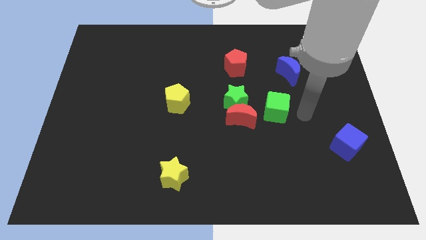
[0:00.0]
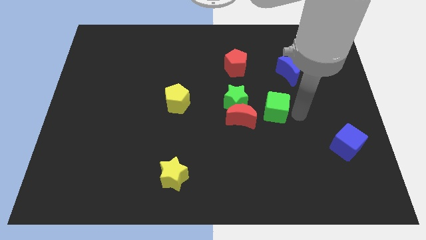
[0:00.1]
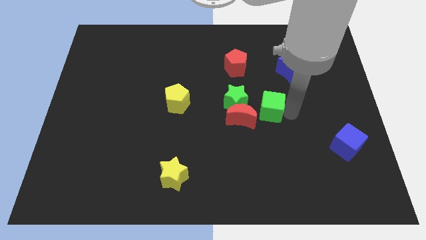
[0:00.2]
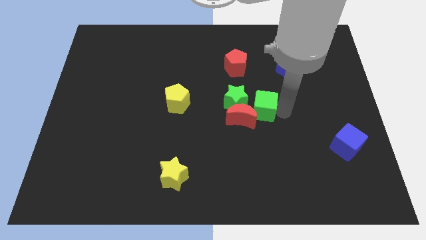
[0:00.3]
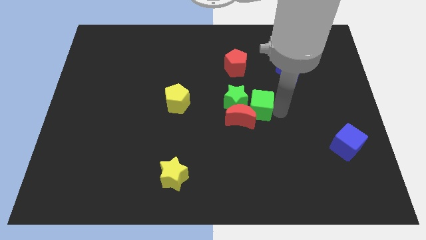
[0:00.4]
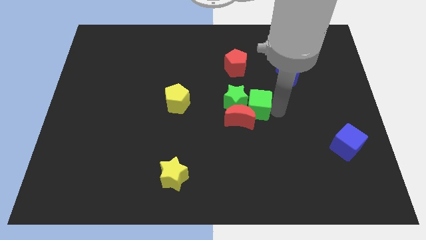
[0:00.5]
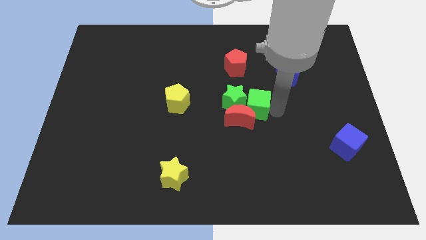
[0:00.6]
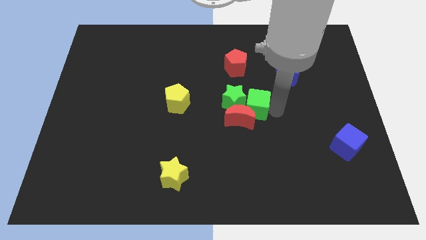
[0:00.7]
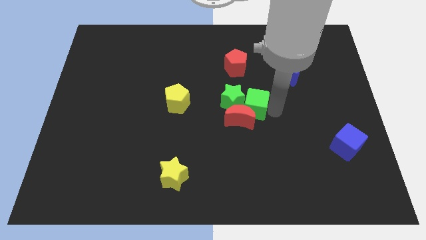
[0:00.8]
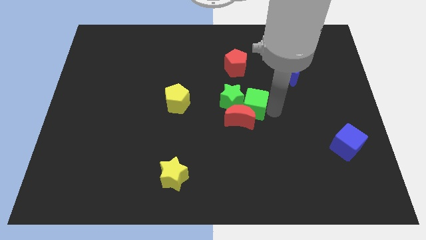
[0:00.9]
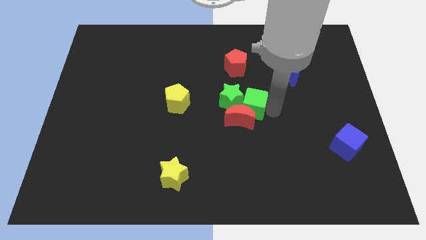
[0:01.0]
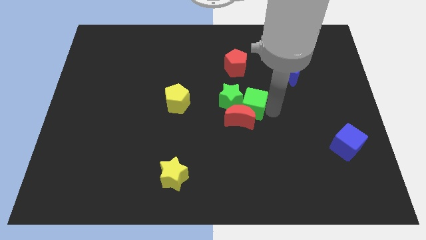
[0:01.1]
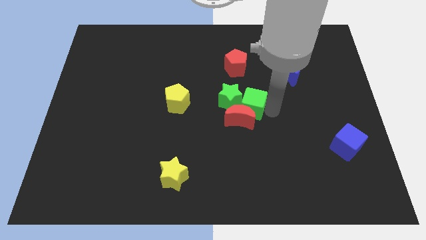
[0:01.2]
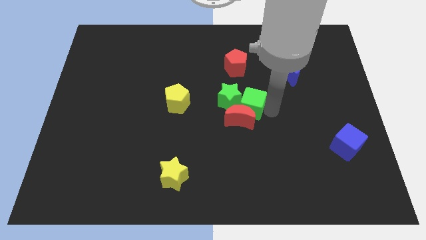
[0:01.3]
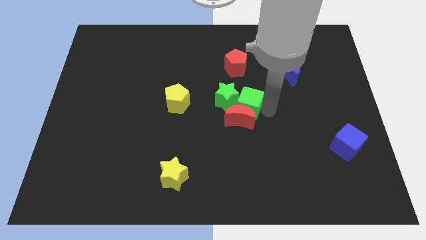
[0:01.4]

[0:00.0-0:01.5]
move green cube into green star

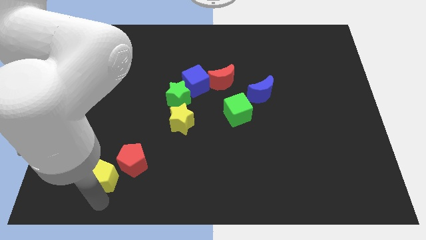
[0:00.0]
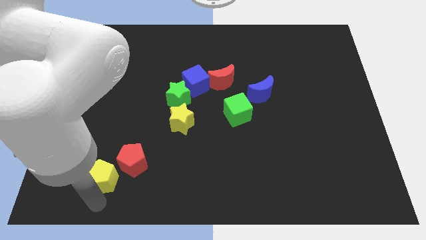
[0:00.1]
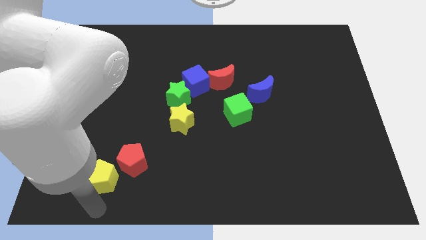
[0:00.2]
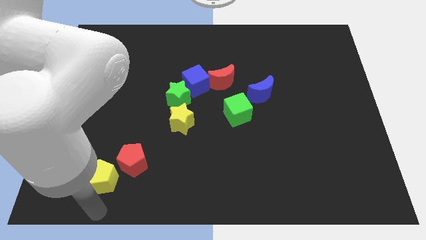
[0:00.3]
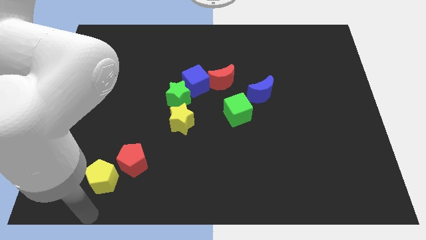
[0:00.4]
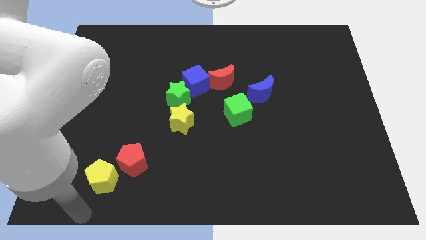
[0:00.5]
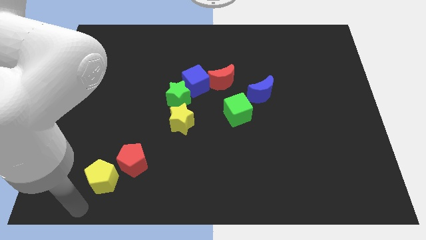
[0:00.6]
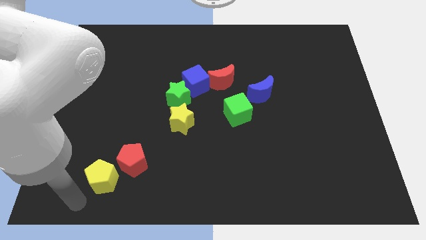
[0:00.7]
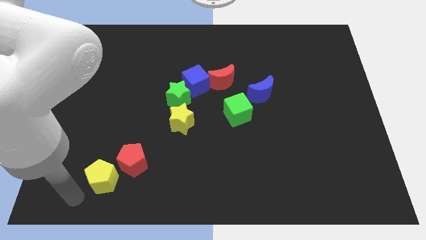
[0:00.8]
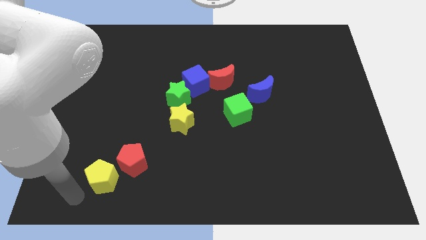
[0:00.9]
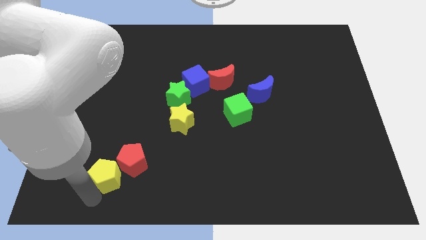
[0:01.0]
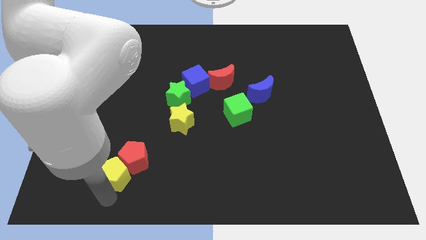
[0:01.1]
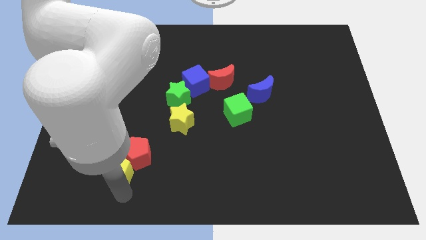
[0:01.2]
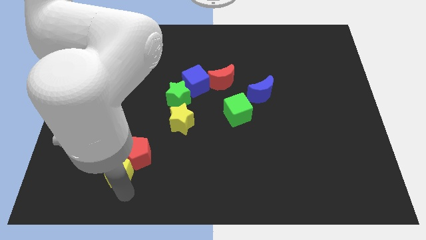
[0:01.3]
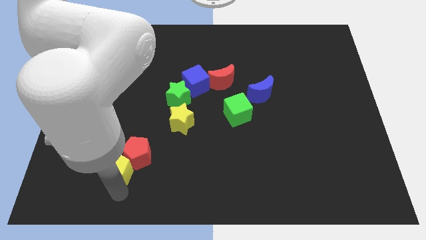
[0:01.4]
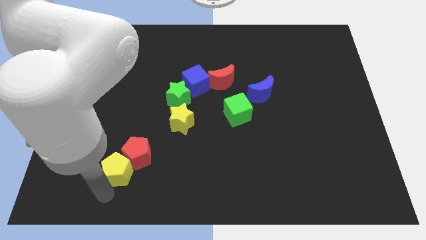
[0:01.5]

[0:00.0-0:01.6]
push yellow pentagon into the red pentagon

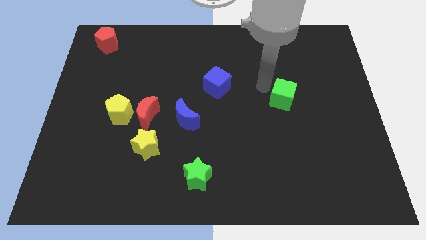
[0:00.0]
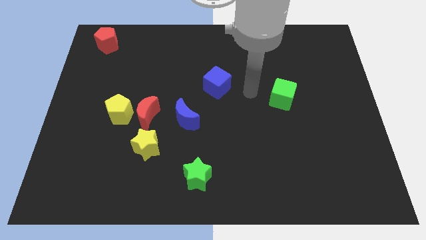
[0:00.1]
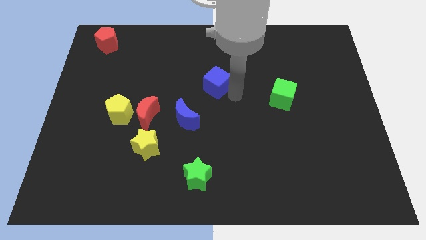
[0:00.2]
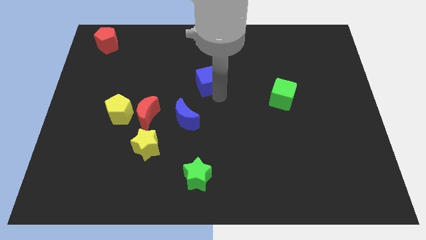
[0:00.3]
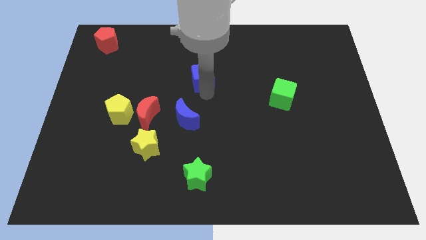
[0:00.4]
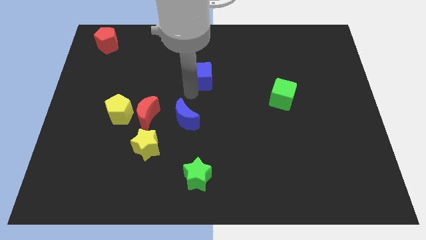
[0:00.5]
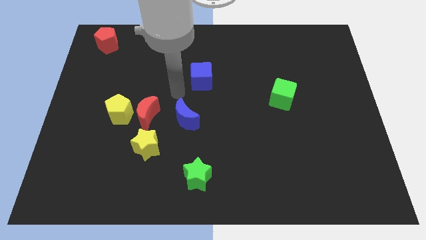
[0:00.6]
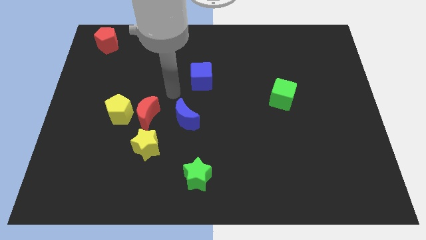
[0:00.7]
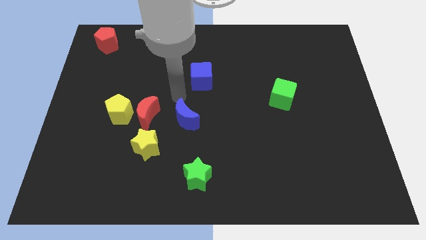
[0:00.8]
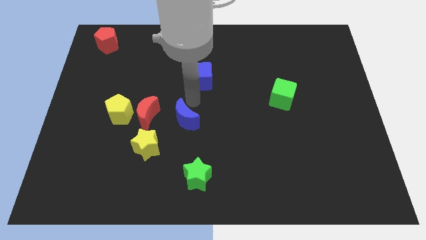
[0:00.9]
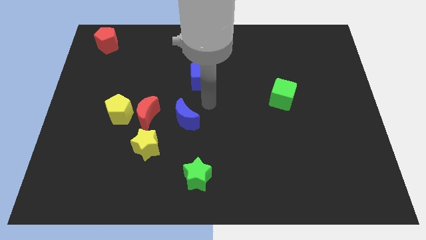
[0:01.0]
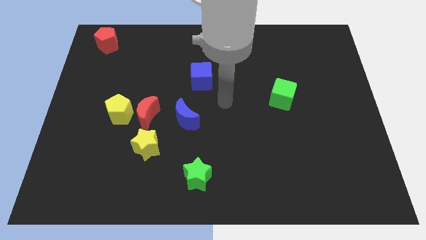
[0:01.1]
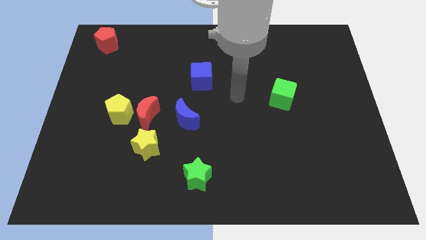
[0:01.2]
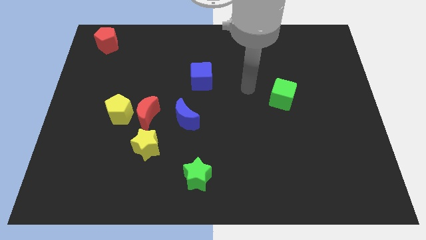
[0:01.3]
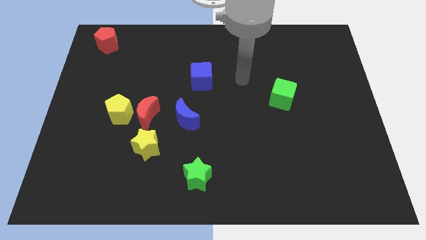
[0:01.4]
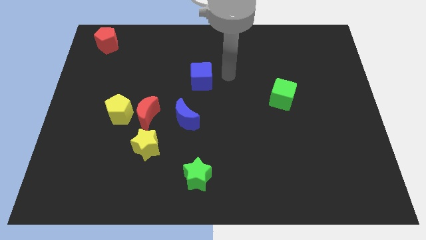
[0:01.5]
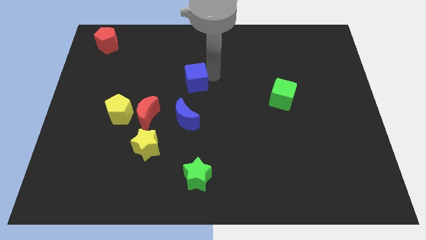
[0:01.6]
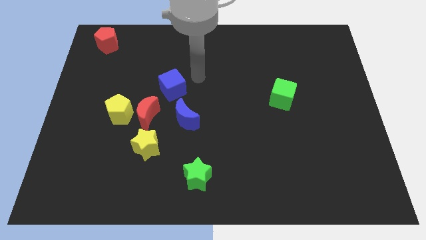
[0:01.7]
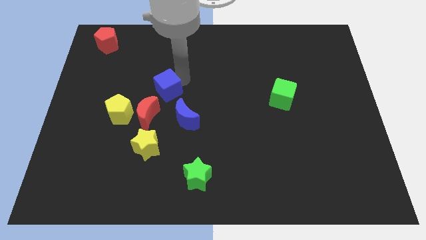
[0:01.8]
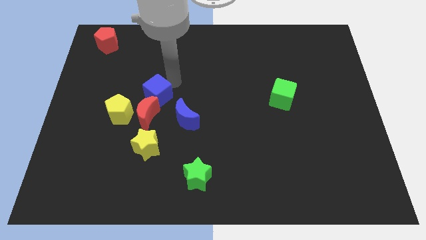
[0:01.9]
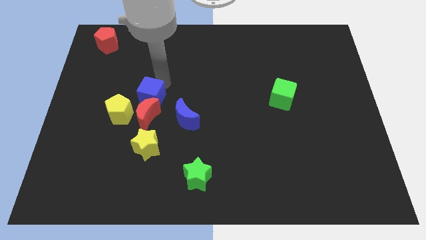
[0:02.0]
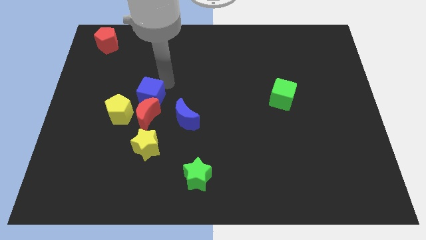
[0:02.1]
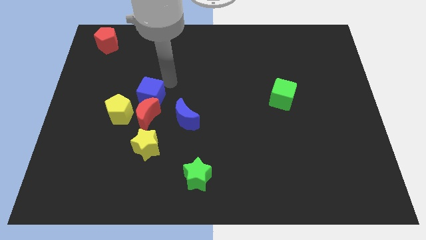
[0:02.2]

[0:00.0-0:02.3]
put the blue cube at the top of the red crescent

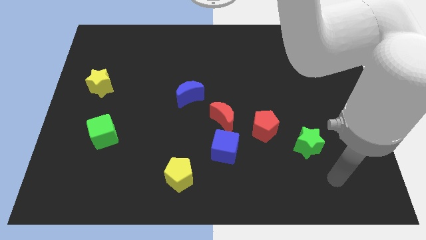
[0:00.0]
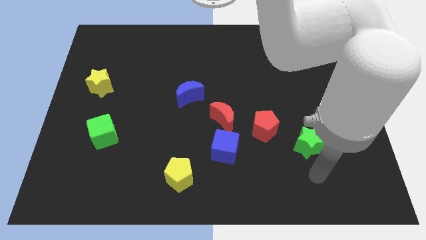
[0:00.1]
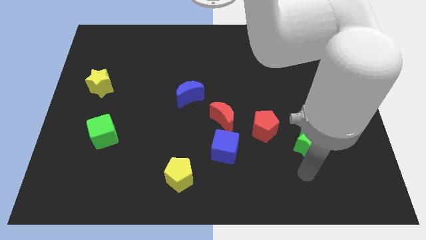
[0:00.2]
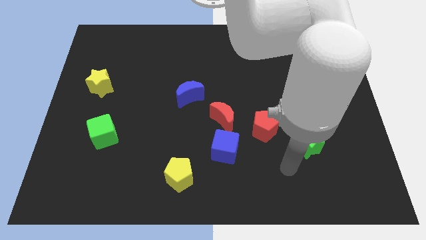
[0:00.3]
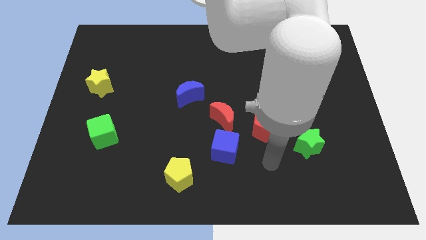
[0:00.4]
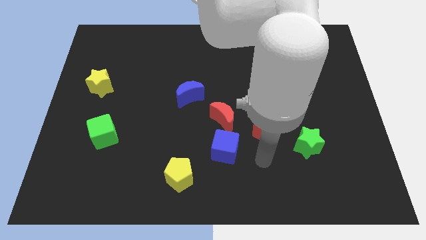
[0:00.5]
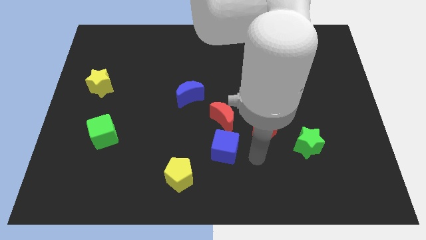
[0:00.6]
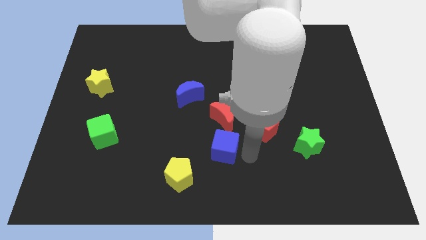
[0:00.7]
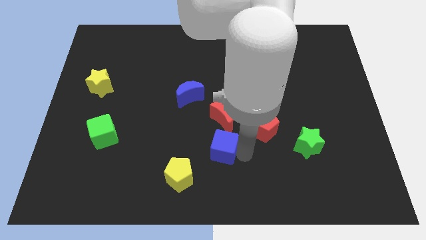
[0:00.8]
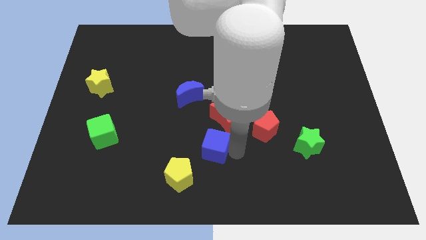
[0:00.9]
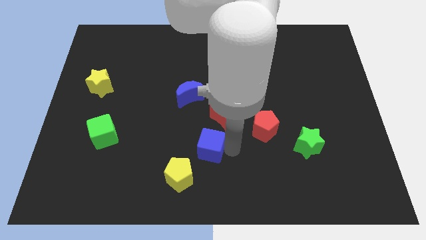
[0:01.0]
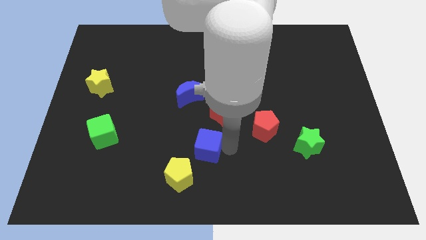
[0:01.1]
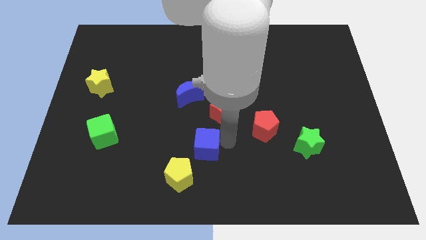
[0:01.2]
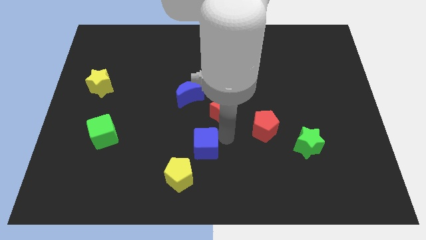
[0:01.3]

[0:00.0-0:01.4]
push the blue cube slightly to the left

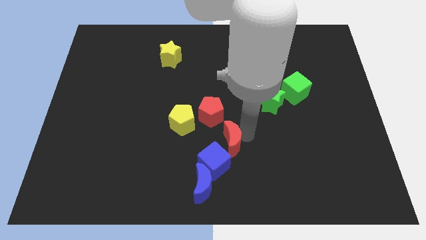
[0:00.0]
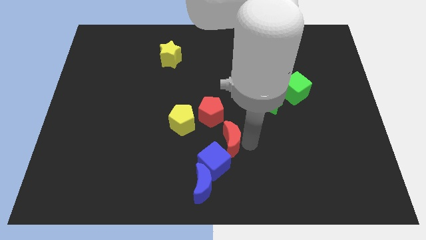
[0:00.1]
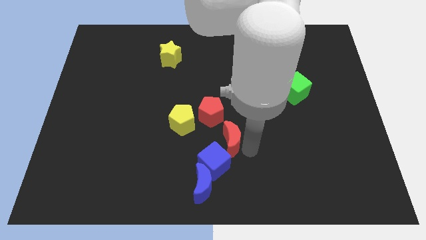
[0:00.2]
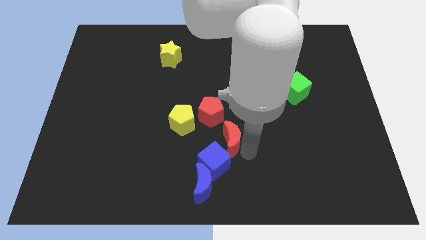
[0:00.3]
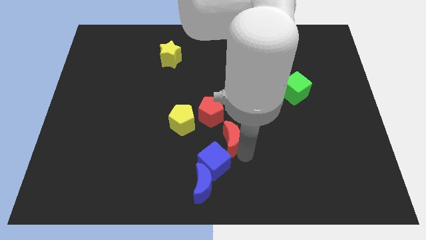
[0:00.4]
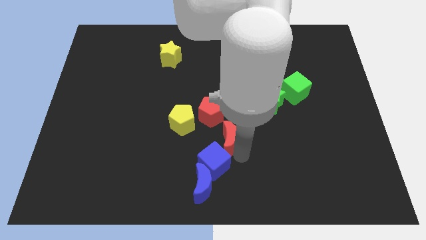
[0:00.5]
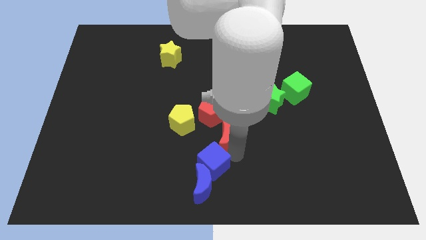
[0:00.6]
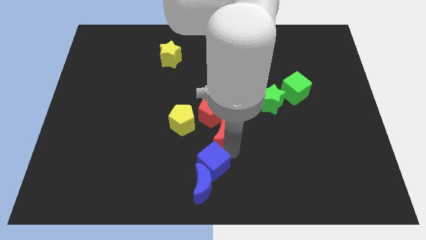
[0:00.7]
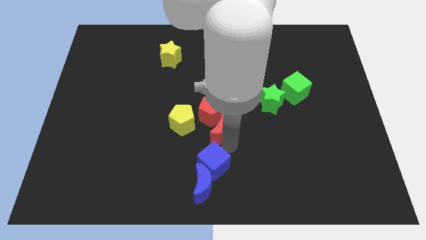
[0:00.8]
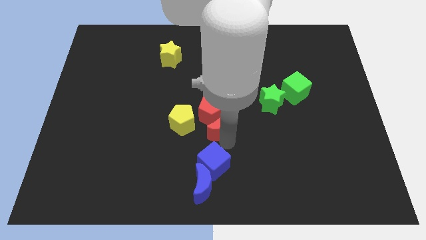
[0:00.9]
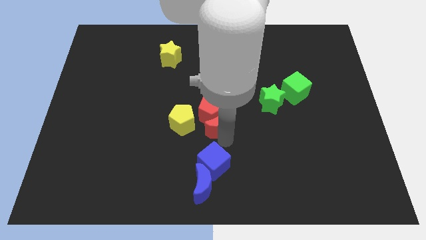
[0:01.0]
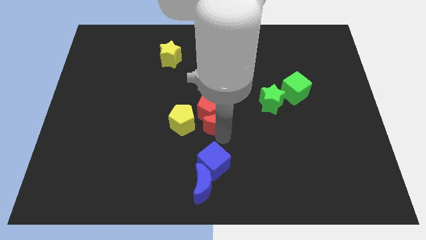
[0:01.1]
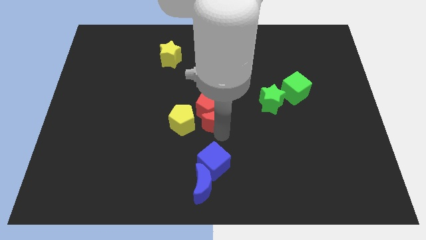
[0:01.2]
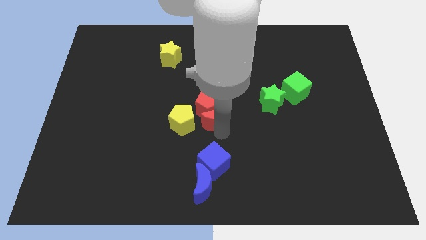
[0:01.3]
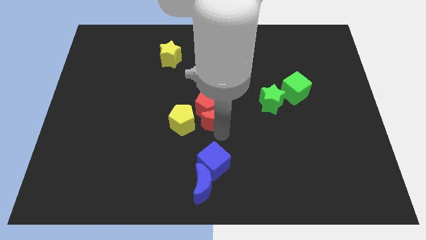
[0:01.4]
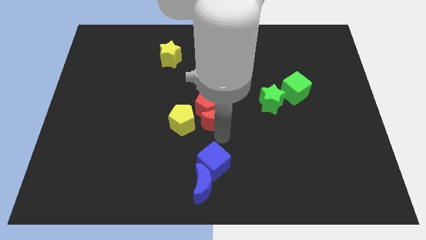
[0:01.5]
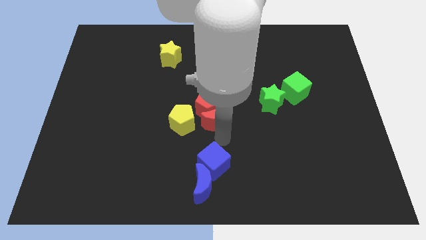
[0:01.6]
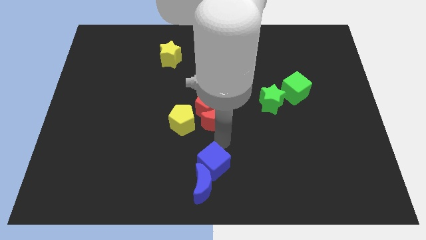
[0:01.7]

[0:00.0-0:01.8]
push the red crescent into the red pentagon

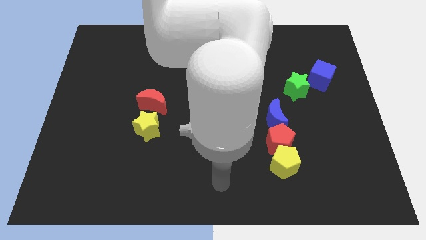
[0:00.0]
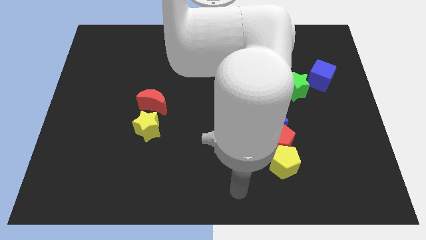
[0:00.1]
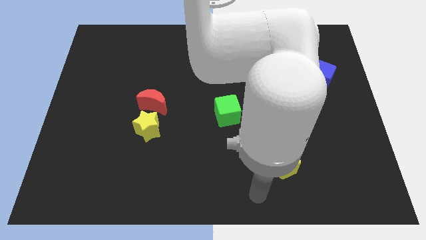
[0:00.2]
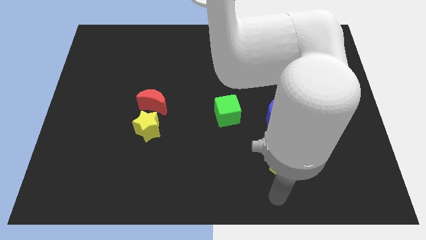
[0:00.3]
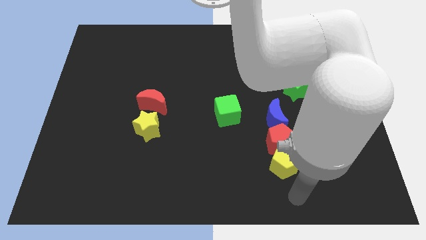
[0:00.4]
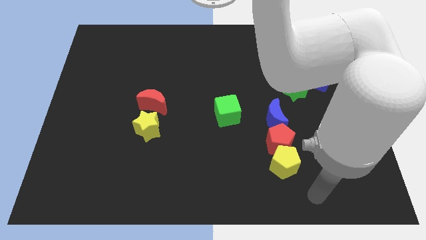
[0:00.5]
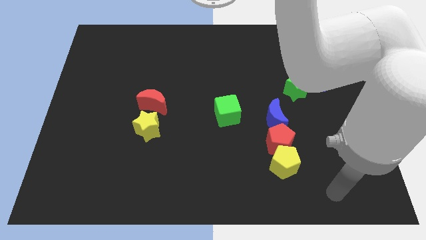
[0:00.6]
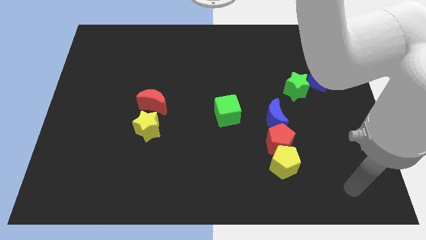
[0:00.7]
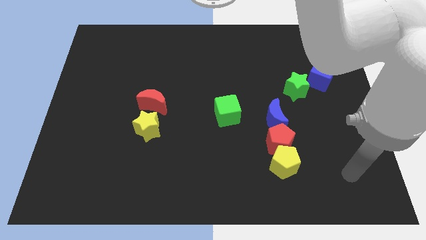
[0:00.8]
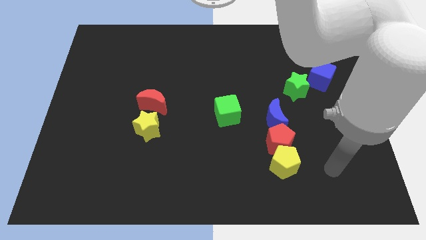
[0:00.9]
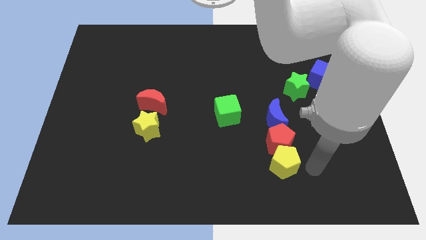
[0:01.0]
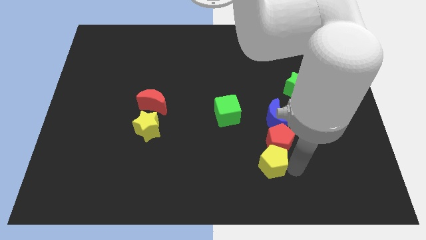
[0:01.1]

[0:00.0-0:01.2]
move the arm to the right of the yellow pentagon
